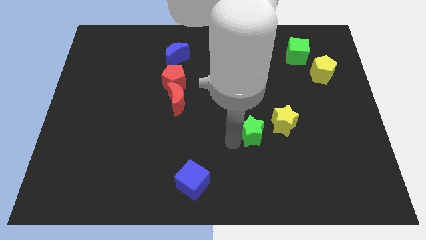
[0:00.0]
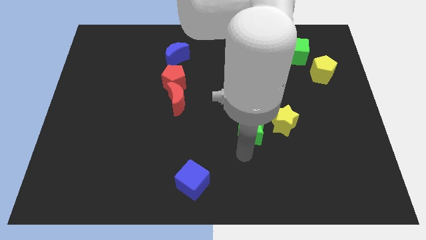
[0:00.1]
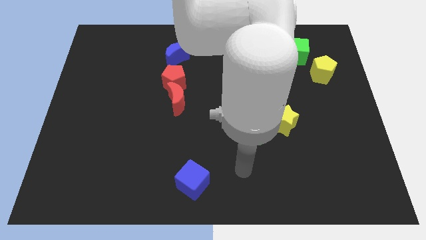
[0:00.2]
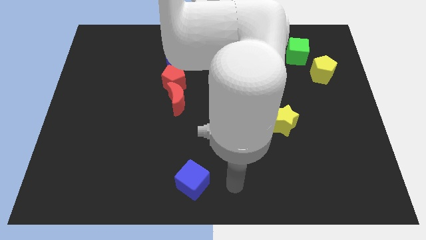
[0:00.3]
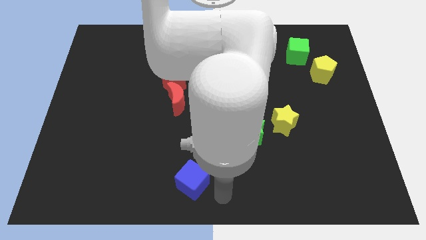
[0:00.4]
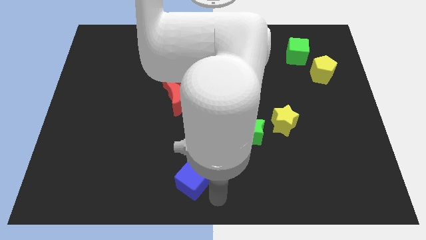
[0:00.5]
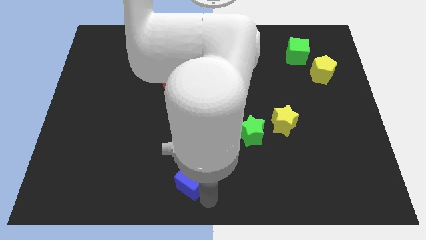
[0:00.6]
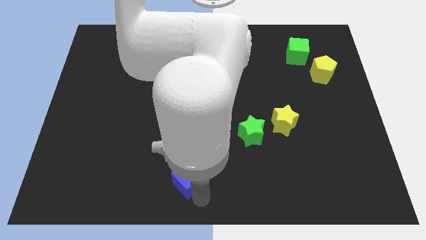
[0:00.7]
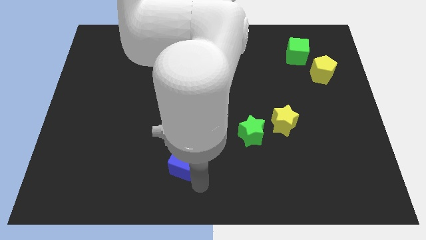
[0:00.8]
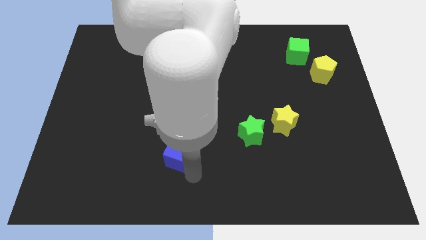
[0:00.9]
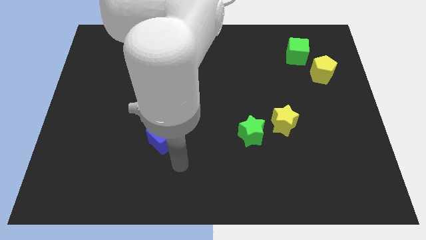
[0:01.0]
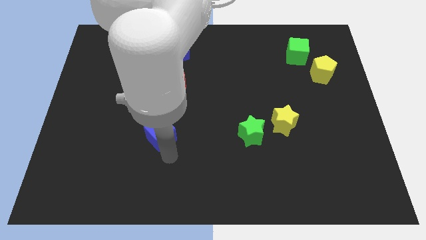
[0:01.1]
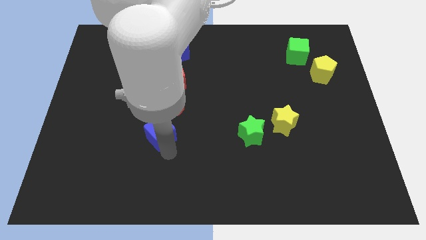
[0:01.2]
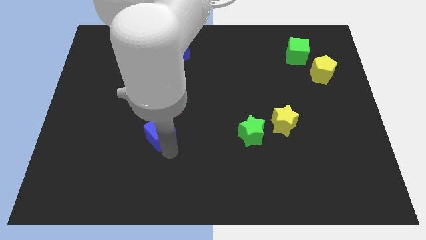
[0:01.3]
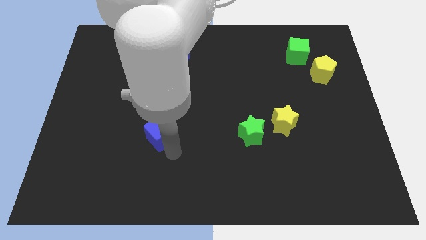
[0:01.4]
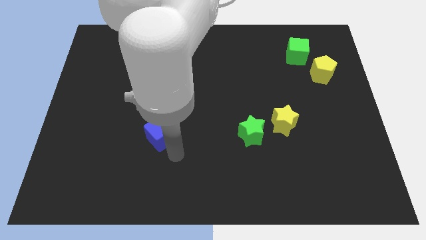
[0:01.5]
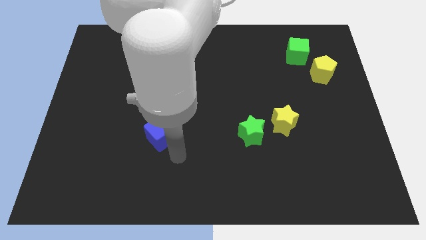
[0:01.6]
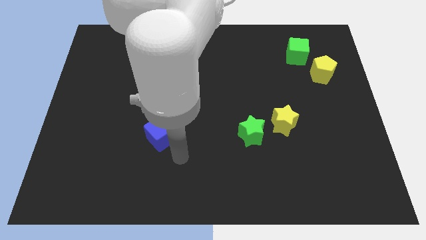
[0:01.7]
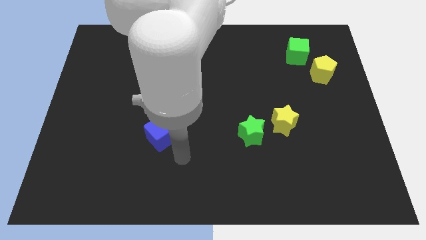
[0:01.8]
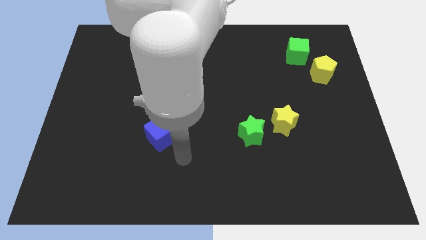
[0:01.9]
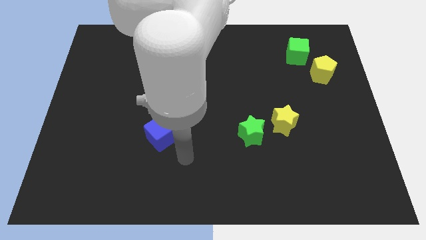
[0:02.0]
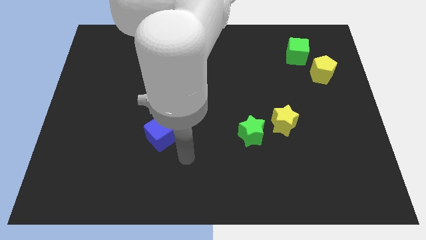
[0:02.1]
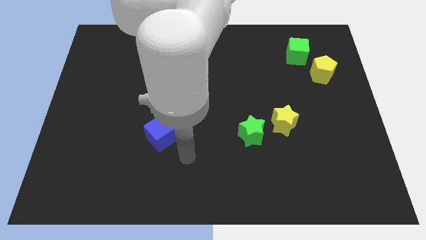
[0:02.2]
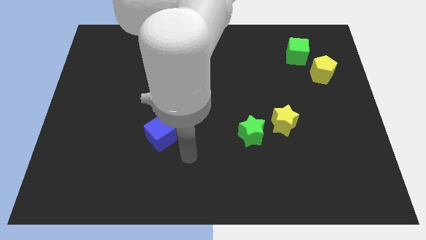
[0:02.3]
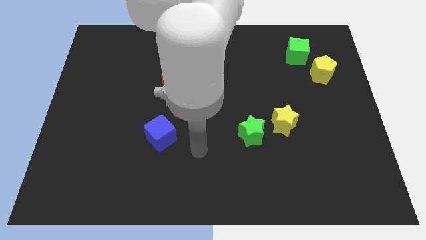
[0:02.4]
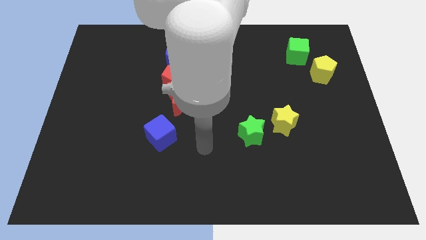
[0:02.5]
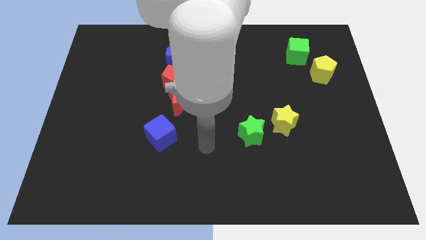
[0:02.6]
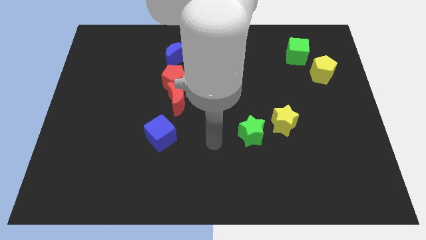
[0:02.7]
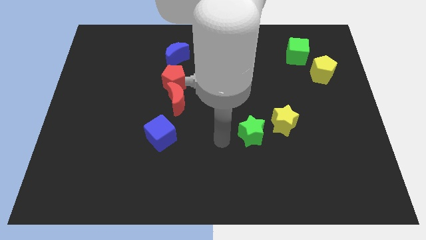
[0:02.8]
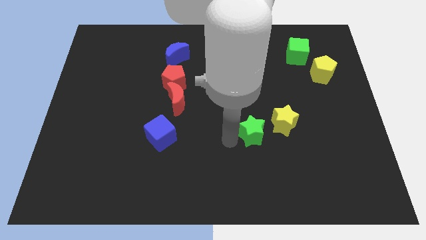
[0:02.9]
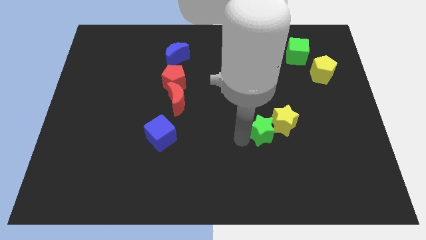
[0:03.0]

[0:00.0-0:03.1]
move blue cube towards the red moon

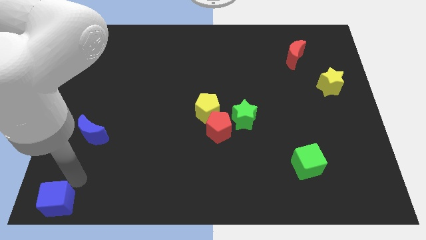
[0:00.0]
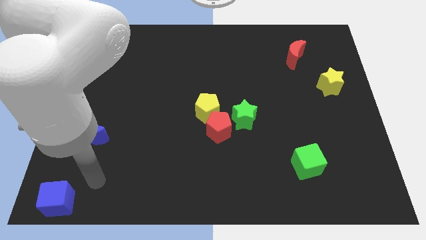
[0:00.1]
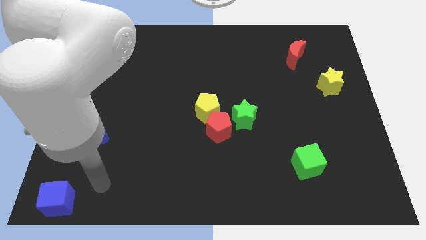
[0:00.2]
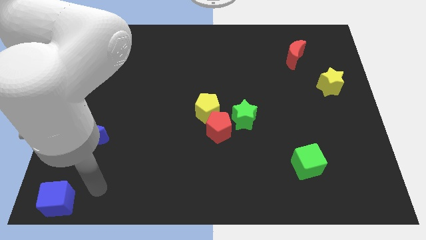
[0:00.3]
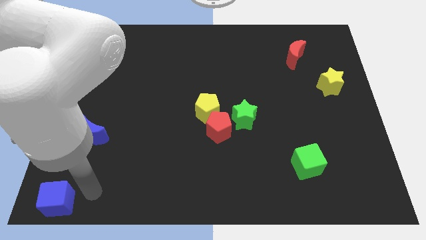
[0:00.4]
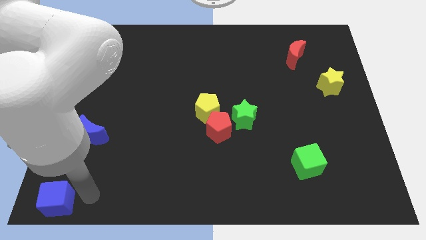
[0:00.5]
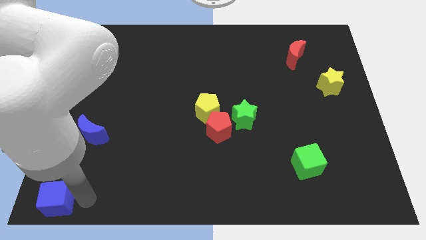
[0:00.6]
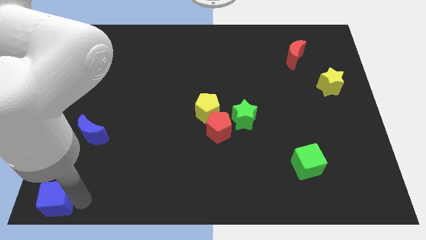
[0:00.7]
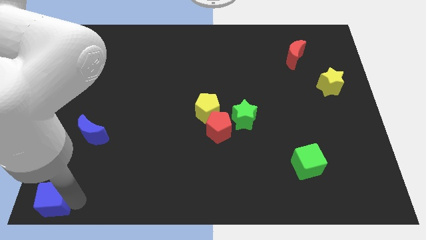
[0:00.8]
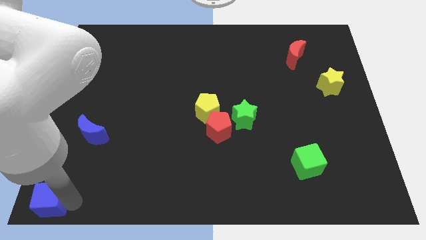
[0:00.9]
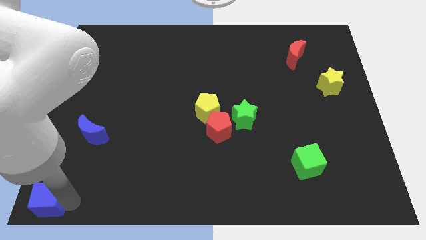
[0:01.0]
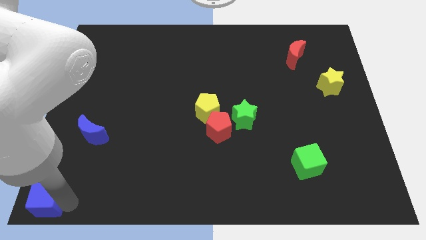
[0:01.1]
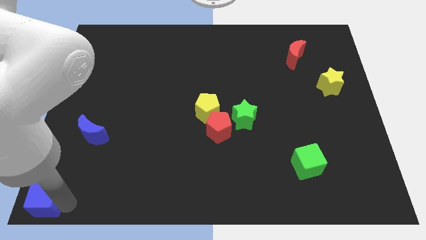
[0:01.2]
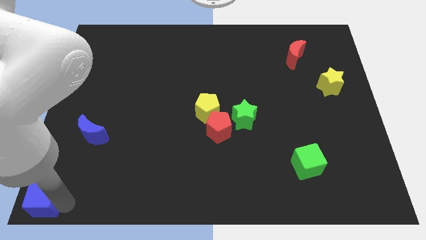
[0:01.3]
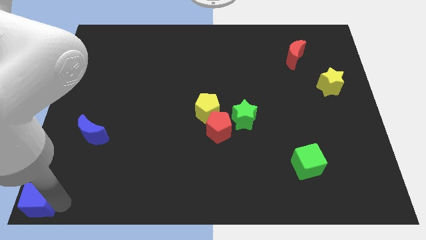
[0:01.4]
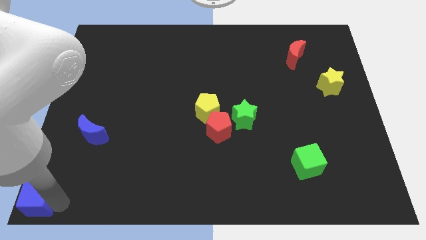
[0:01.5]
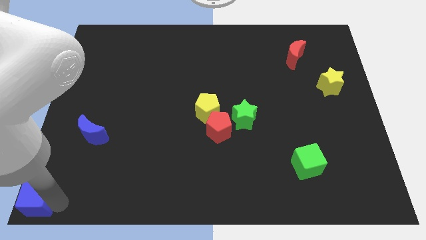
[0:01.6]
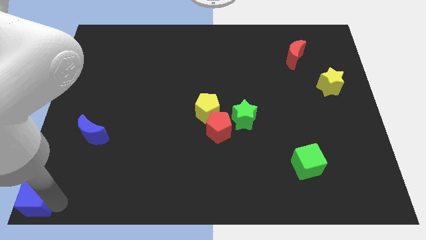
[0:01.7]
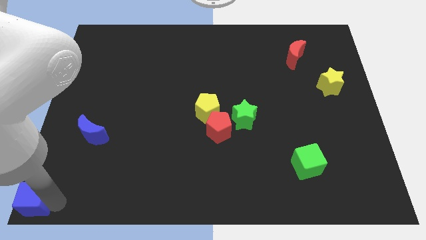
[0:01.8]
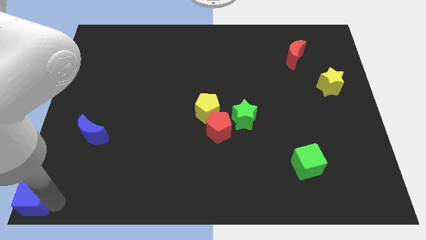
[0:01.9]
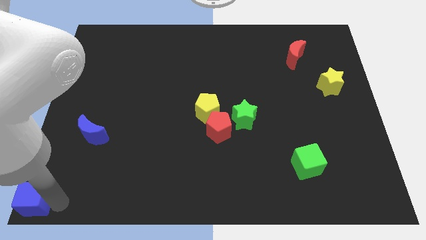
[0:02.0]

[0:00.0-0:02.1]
slide the blue to the bottom left corner of the table

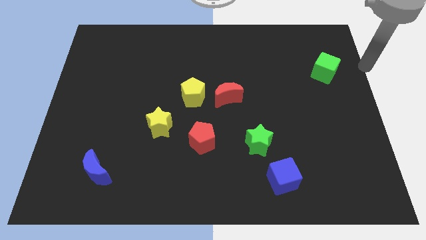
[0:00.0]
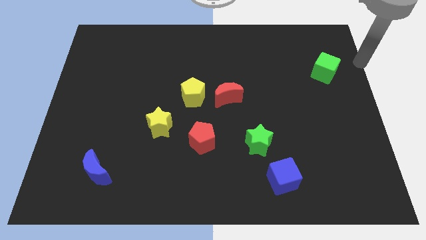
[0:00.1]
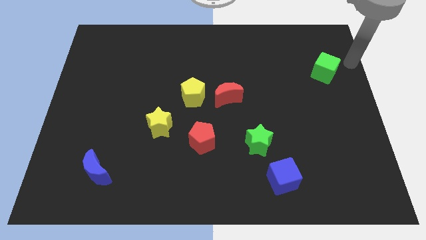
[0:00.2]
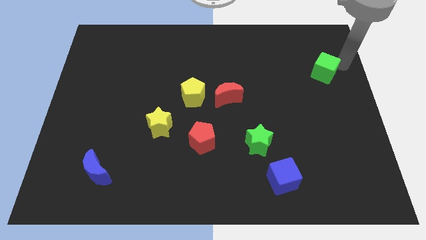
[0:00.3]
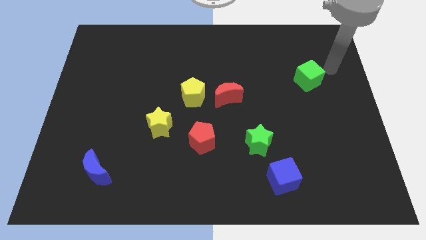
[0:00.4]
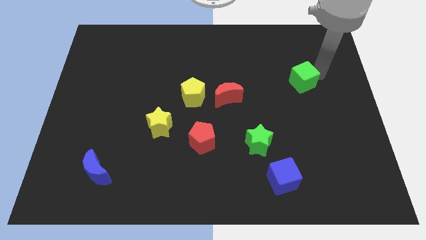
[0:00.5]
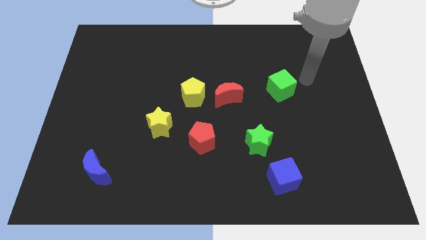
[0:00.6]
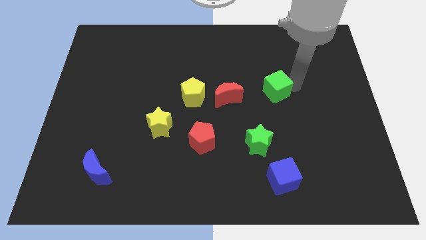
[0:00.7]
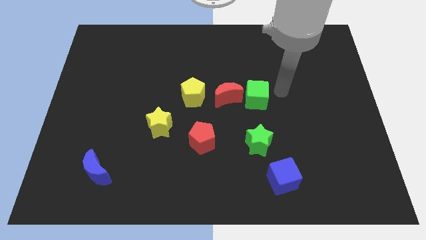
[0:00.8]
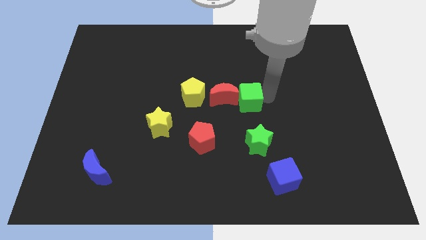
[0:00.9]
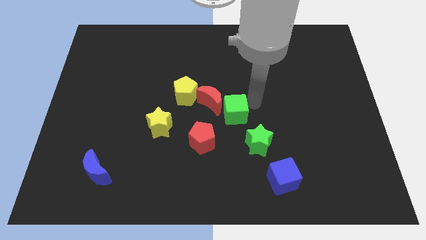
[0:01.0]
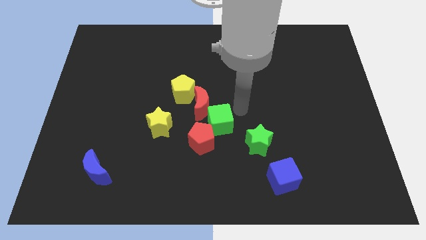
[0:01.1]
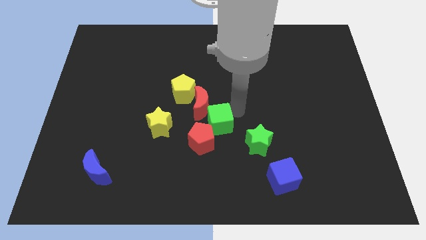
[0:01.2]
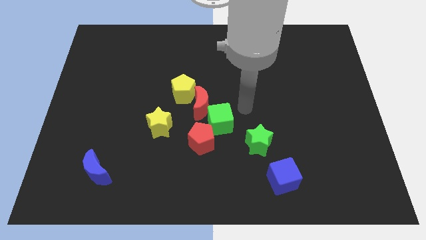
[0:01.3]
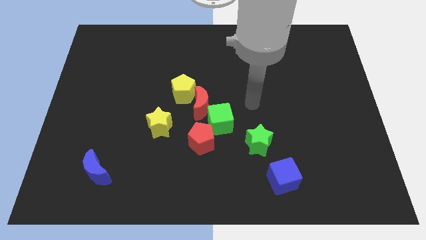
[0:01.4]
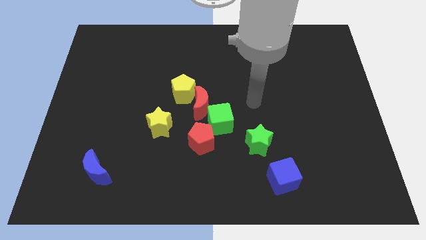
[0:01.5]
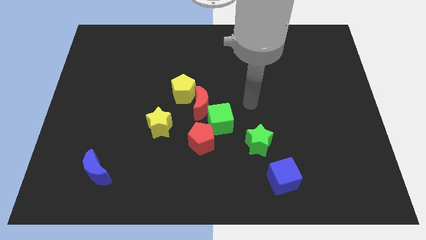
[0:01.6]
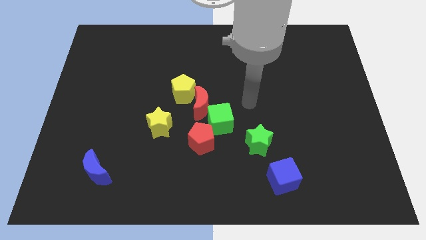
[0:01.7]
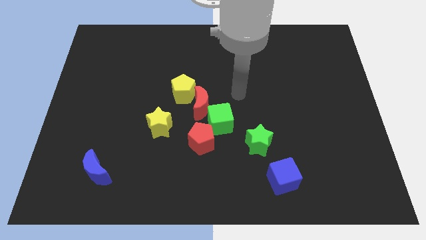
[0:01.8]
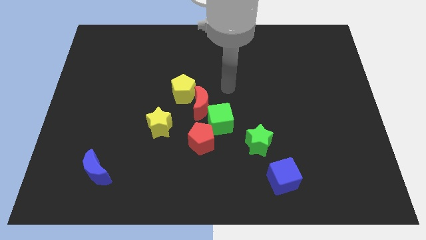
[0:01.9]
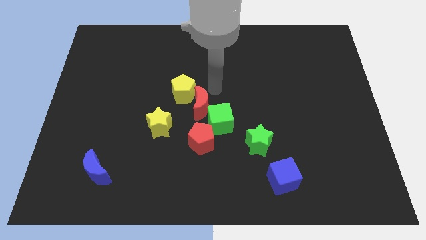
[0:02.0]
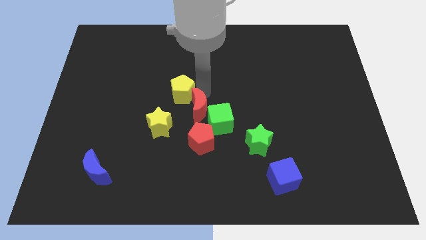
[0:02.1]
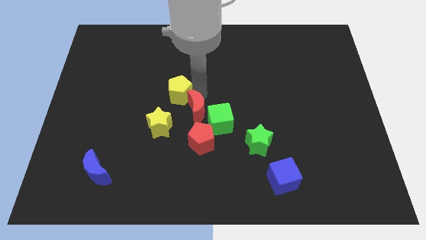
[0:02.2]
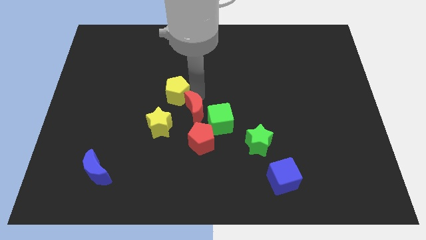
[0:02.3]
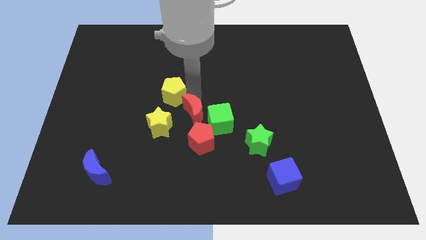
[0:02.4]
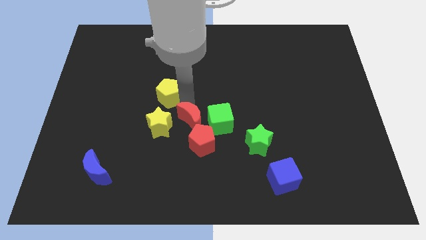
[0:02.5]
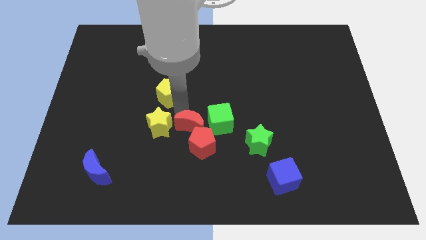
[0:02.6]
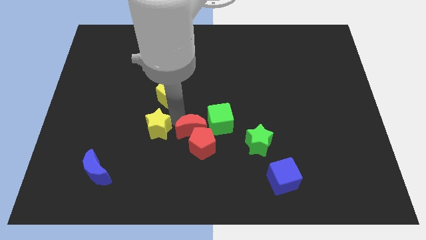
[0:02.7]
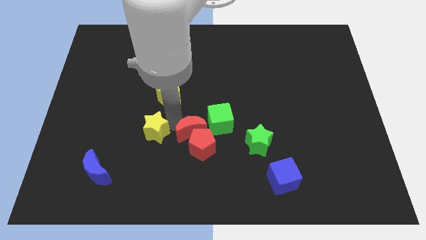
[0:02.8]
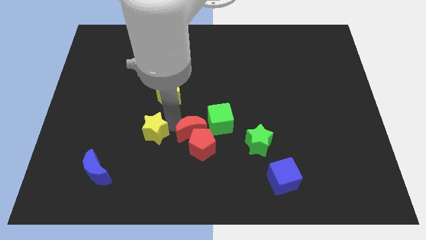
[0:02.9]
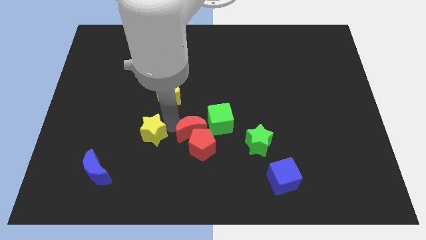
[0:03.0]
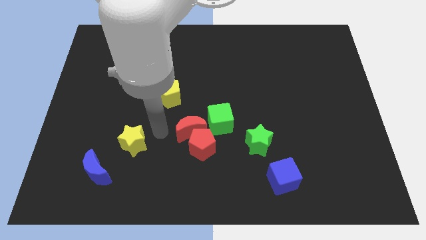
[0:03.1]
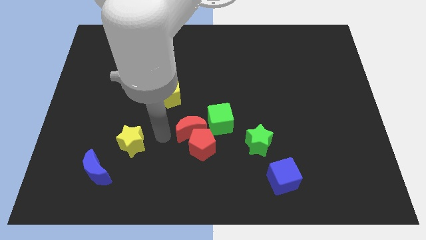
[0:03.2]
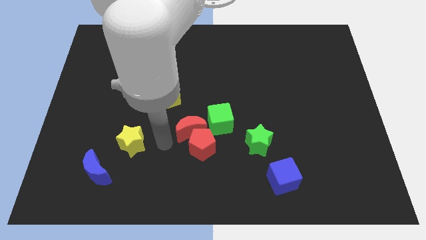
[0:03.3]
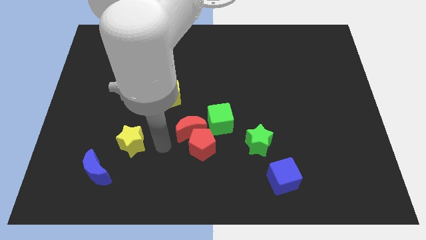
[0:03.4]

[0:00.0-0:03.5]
push the green cube and red crescent towards the top of the red pentagon

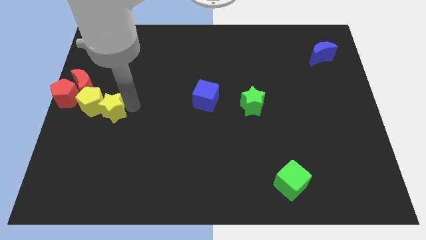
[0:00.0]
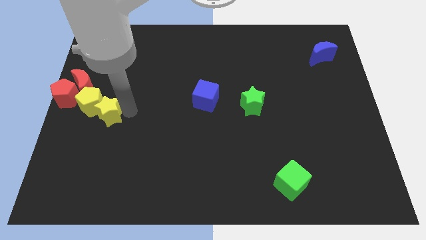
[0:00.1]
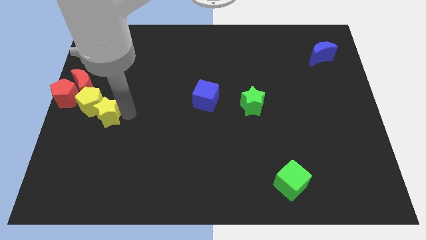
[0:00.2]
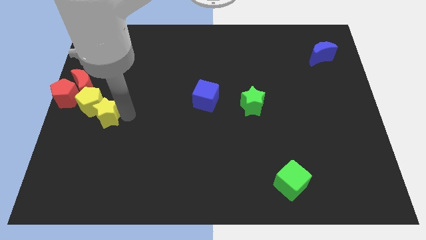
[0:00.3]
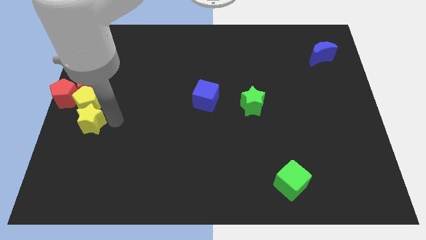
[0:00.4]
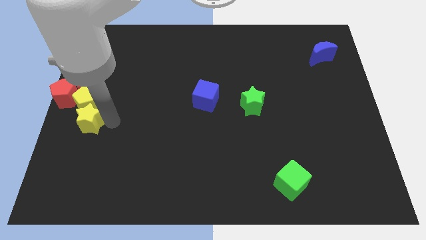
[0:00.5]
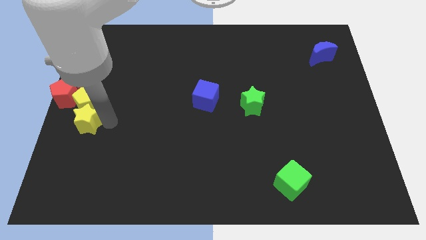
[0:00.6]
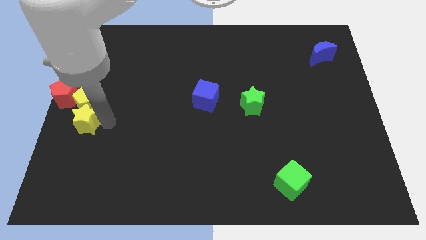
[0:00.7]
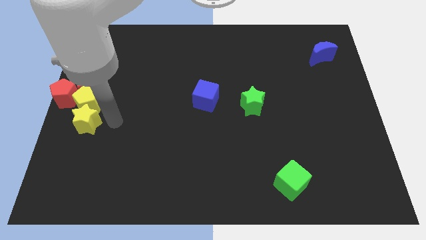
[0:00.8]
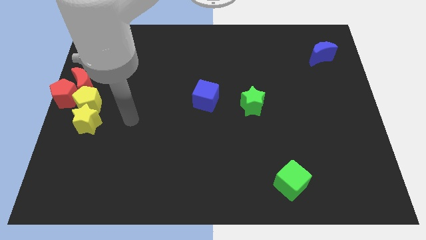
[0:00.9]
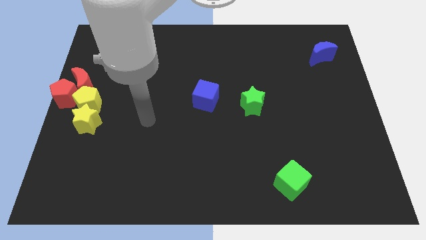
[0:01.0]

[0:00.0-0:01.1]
place the yellow star to the bottom of the yellow pentagon
